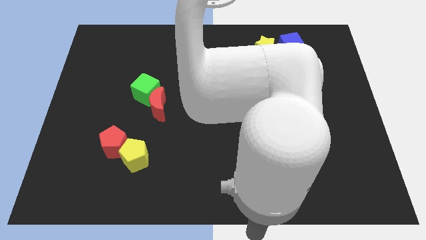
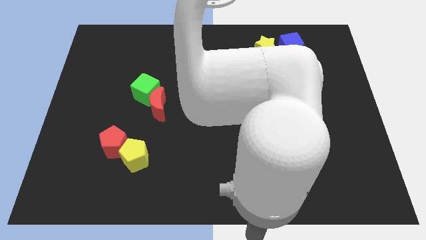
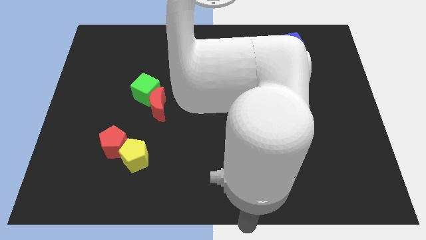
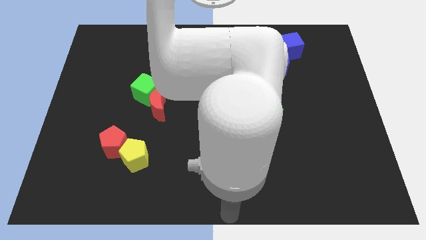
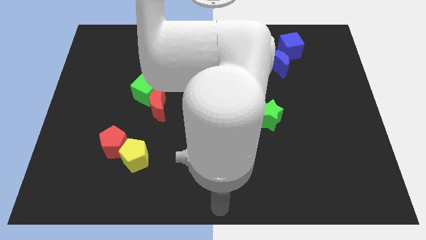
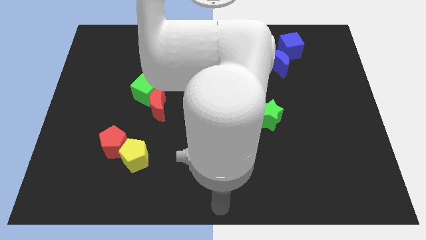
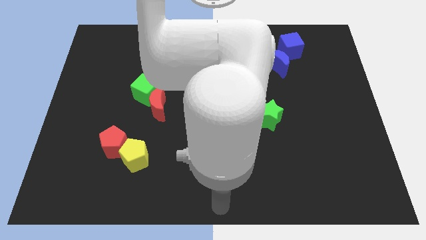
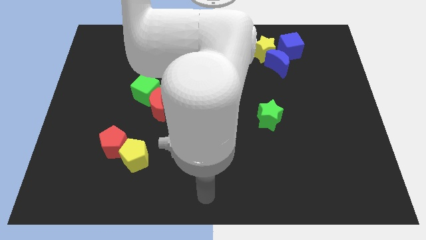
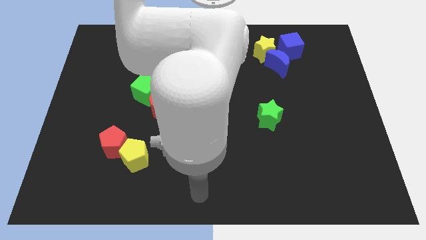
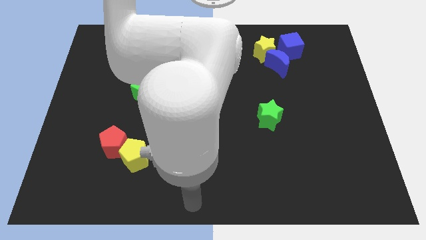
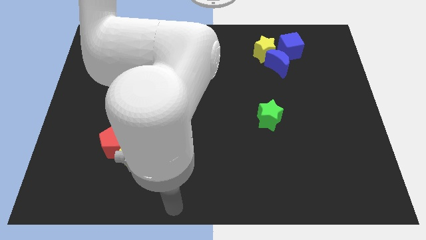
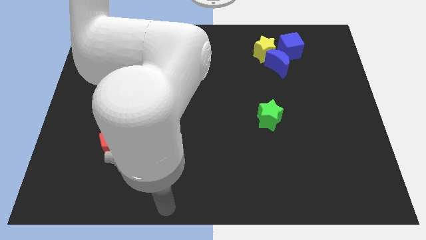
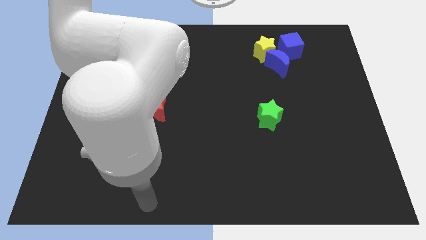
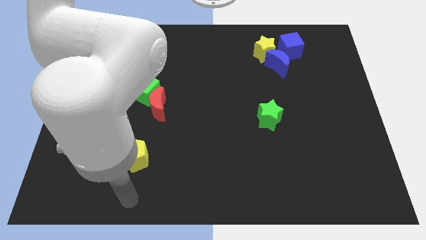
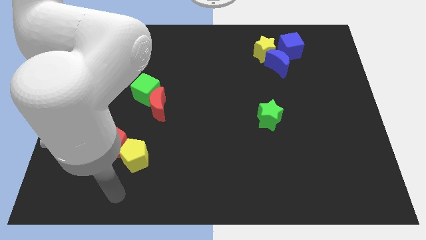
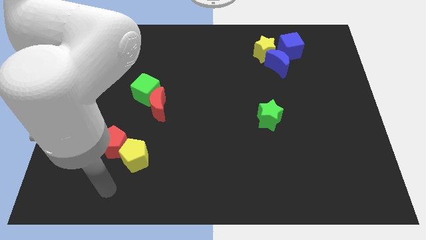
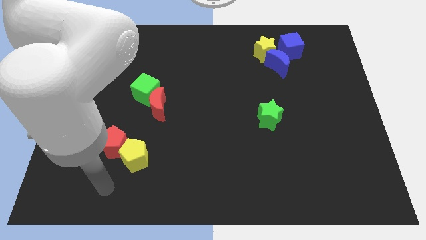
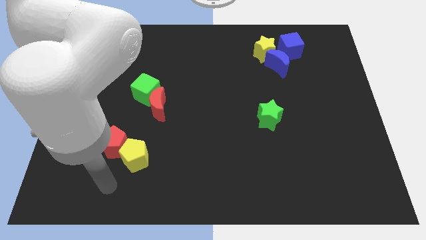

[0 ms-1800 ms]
point the arm below the red pentagon

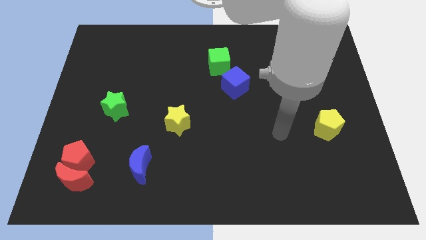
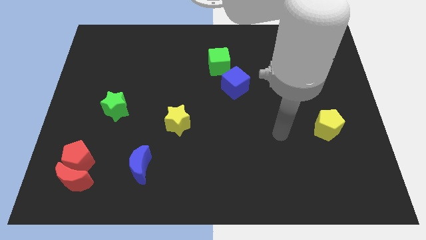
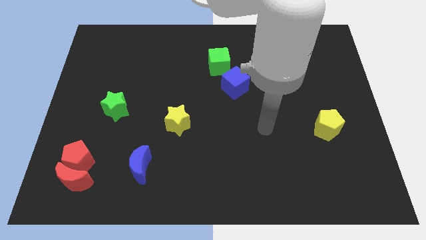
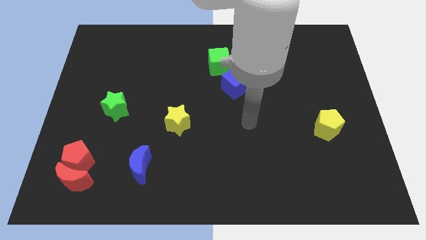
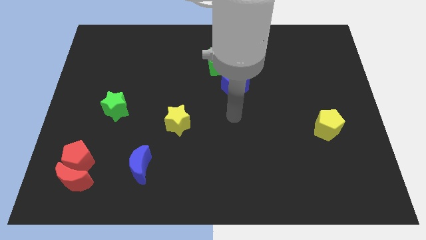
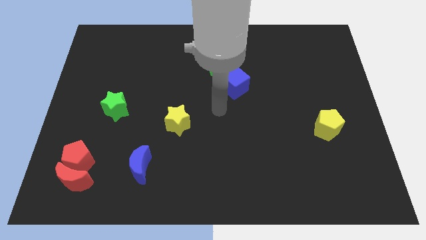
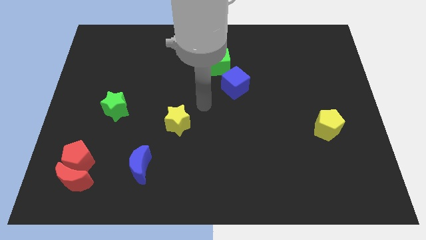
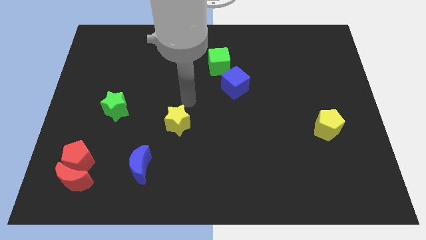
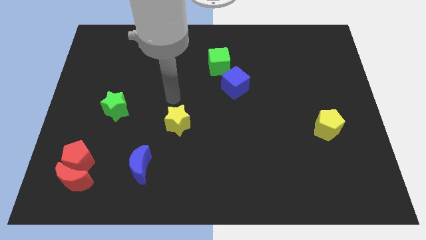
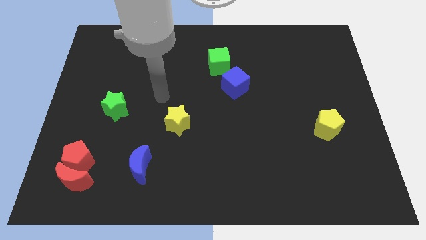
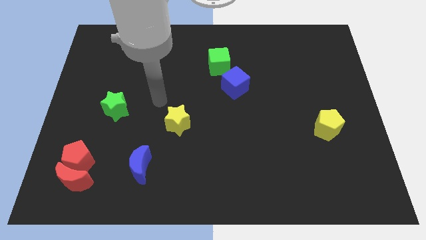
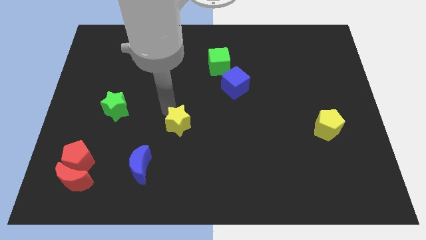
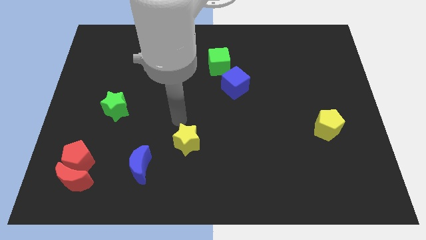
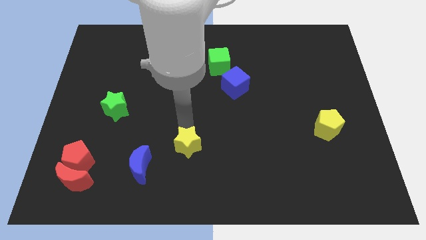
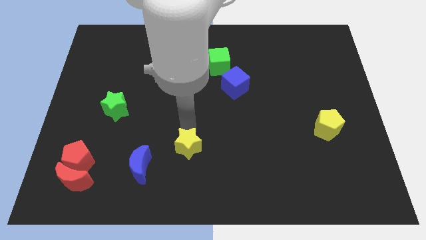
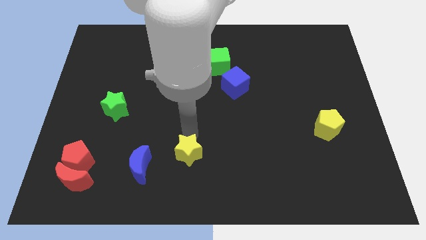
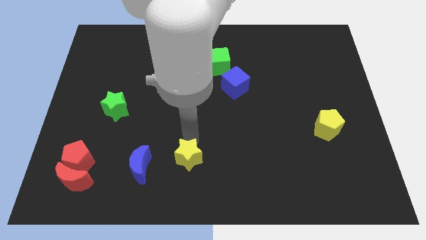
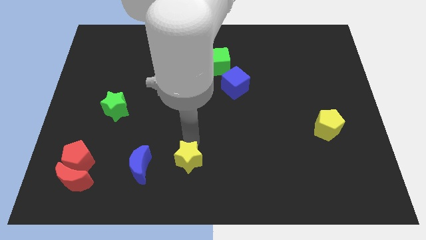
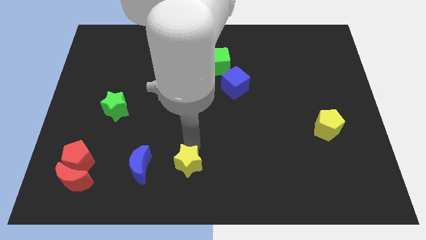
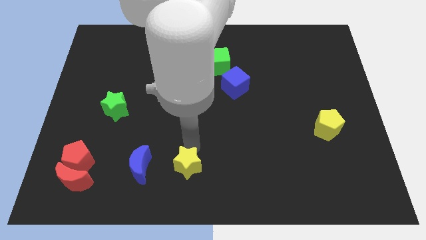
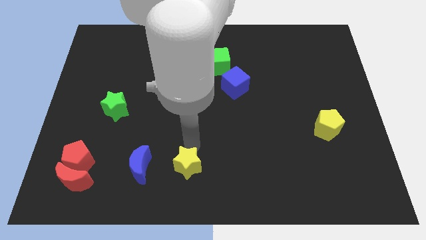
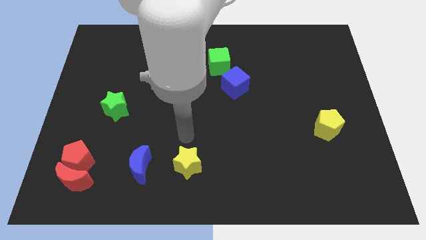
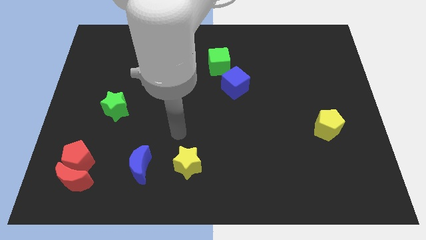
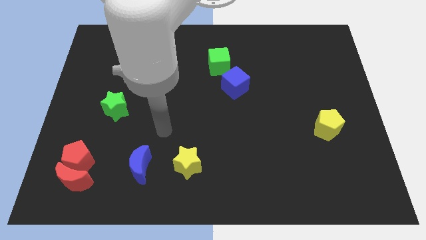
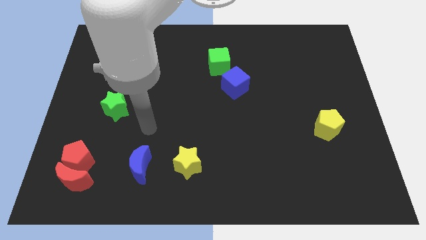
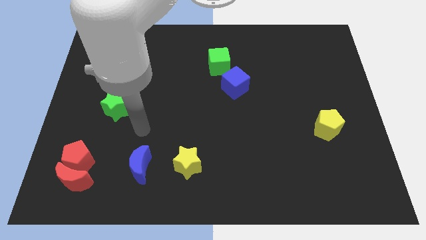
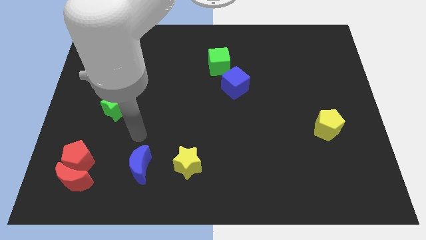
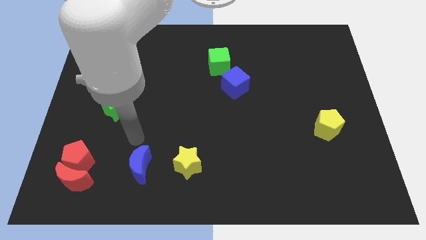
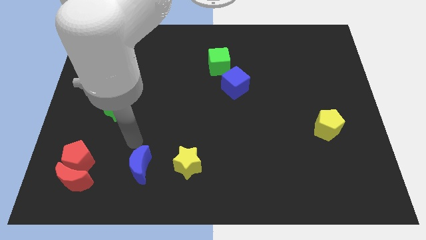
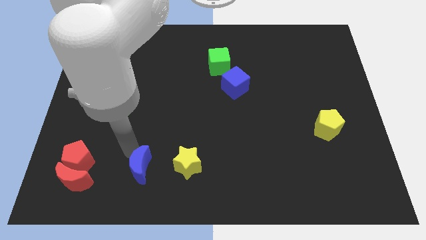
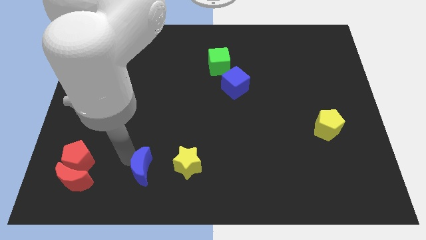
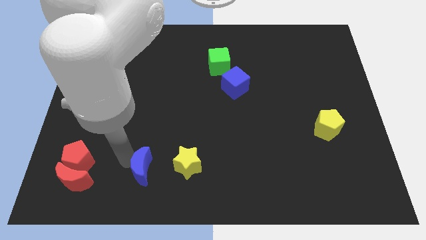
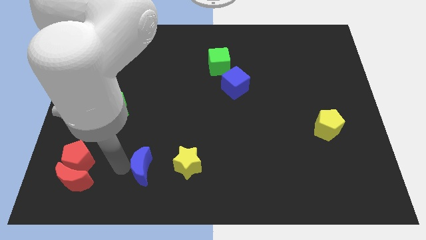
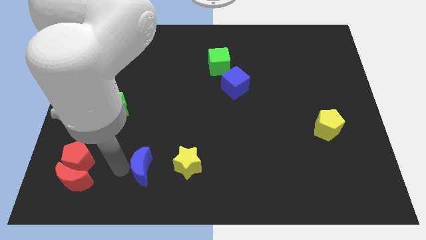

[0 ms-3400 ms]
push yellow star to the right of blue crescent

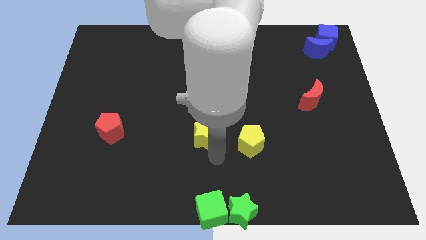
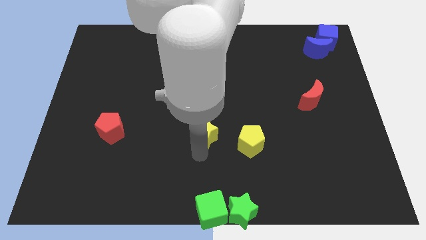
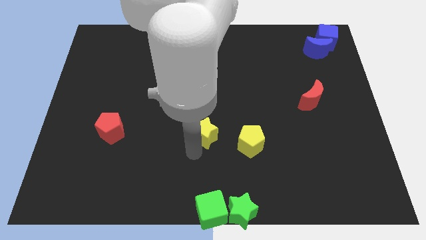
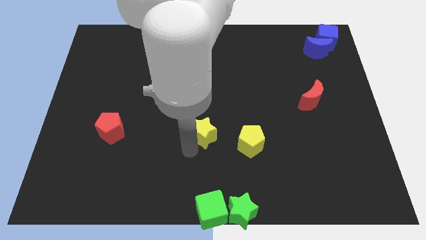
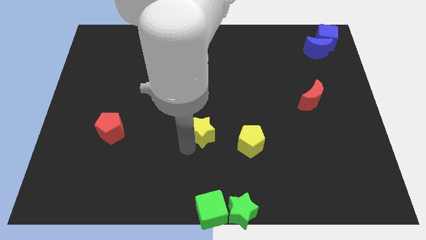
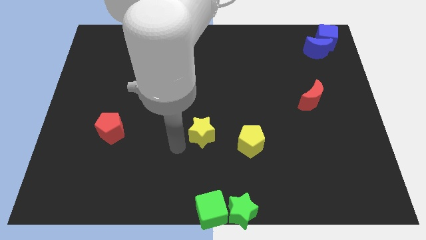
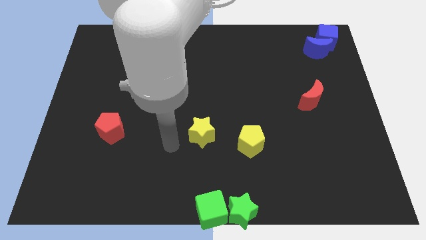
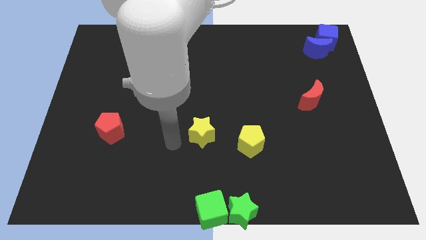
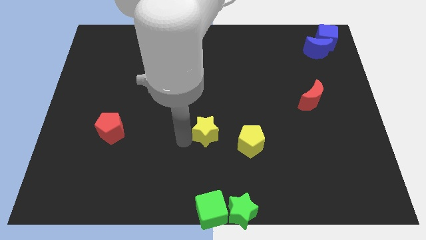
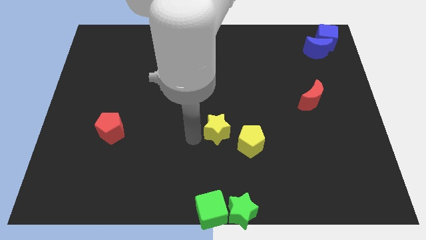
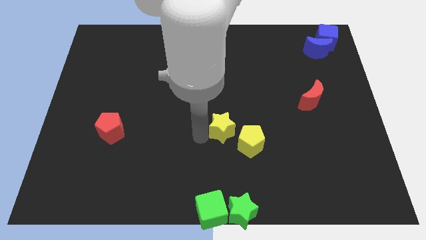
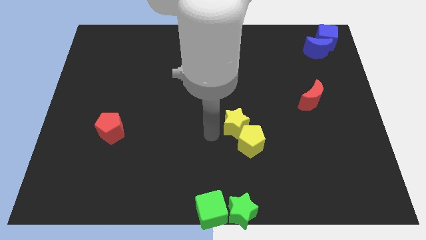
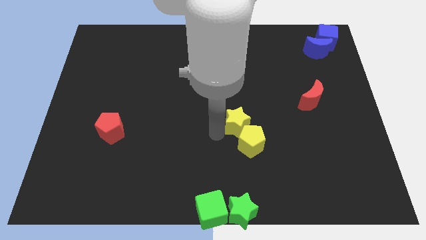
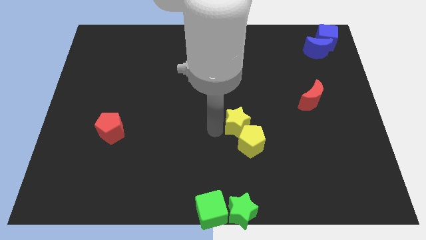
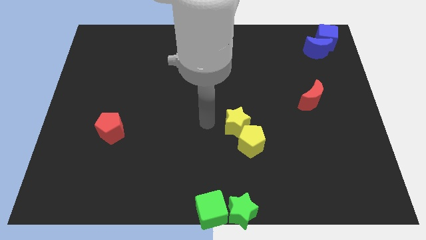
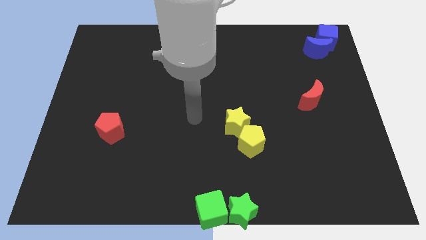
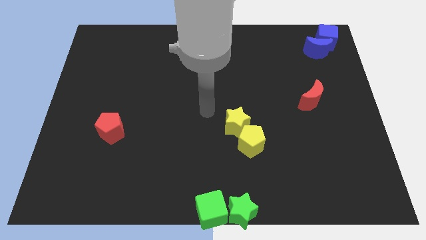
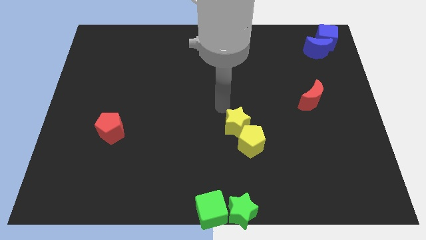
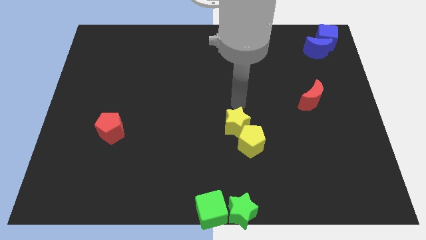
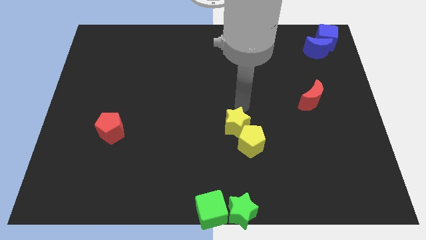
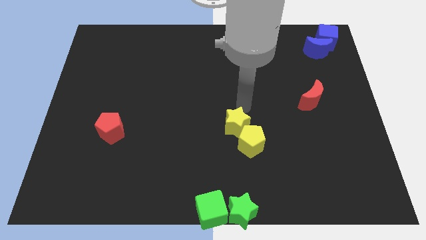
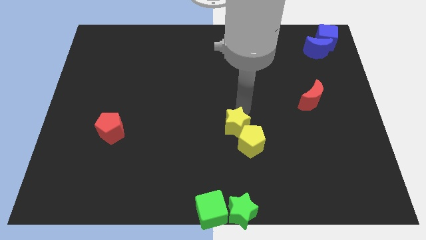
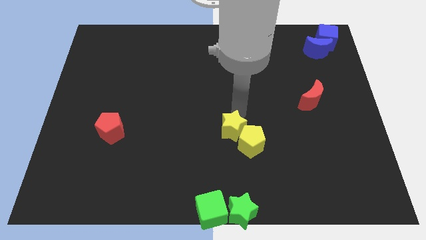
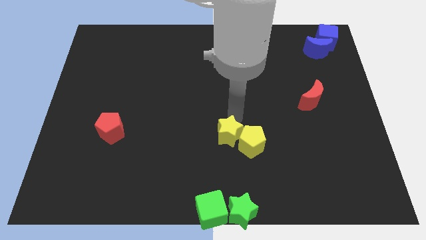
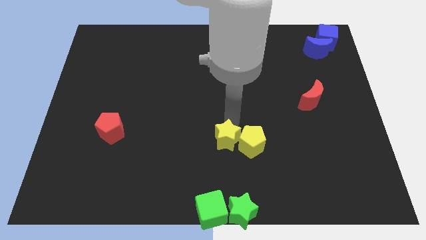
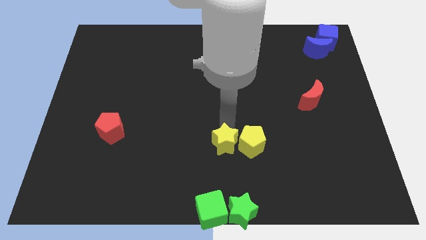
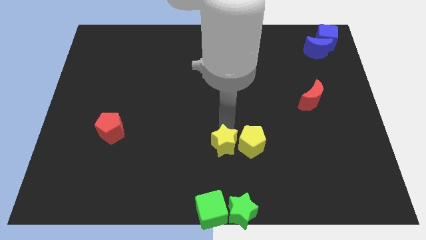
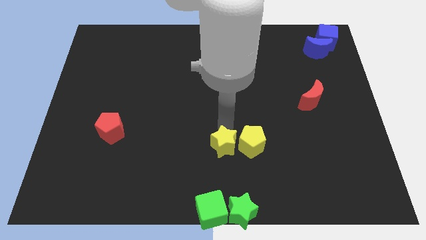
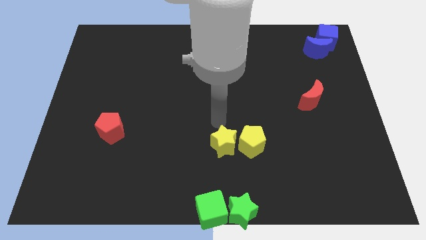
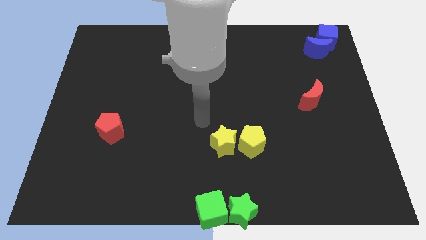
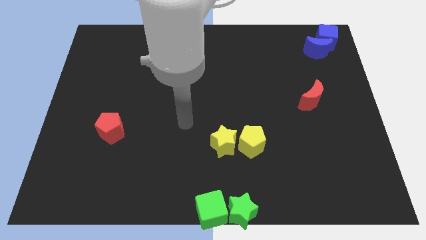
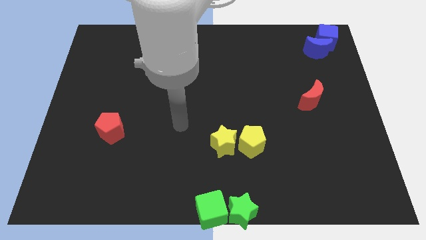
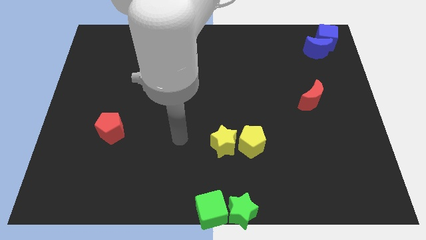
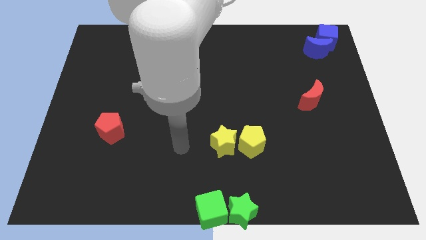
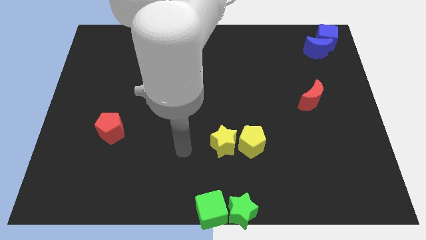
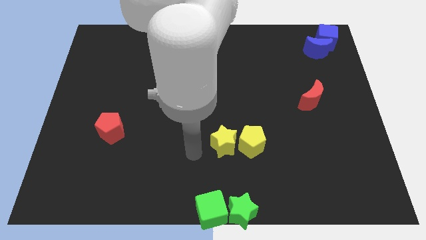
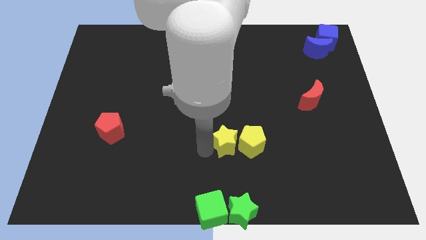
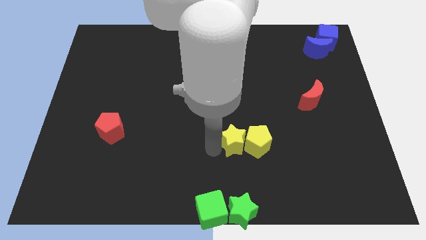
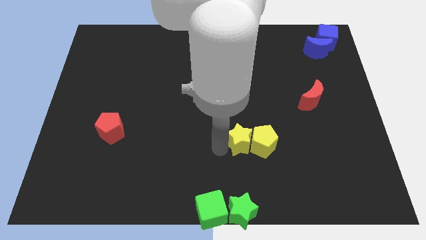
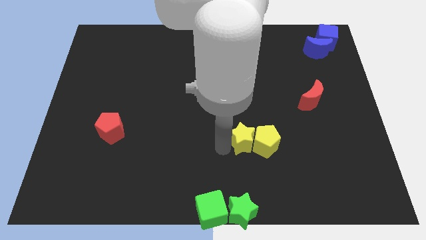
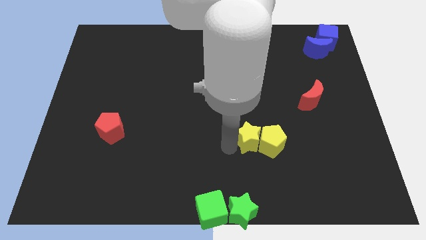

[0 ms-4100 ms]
push yellow star above green star
